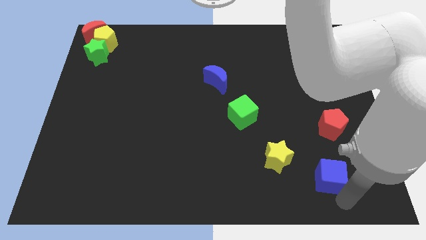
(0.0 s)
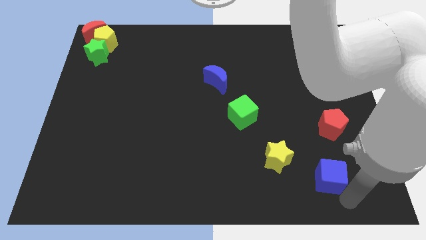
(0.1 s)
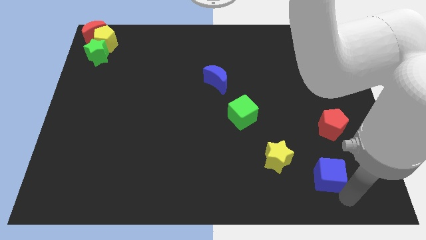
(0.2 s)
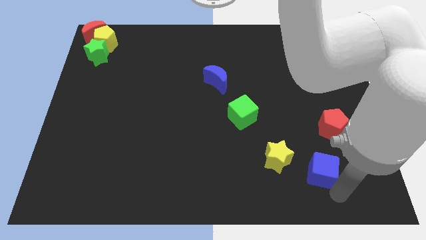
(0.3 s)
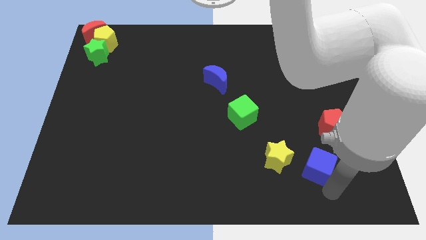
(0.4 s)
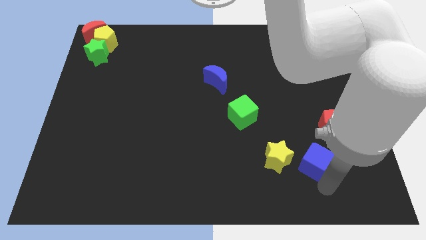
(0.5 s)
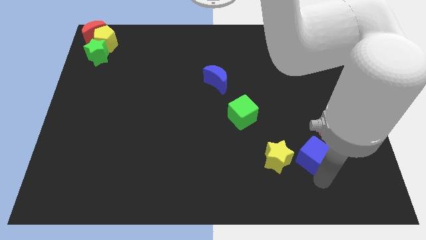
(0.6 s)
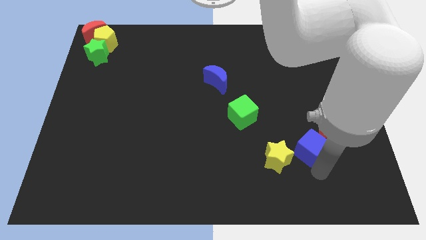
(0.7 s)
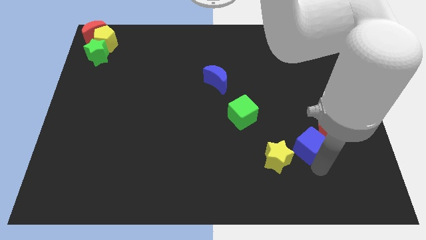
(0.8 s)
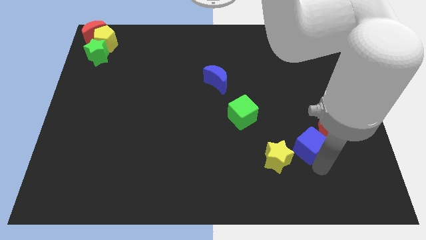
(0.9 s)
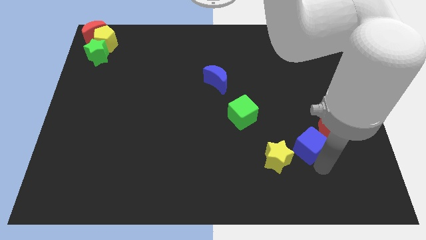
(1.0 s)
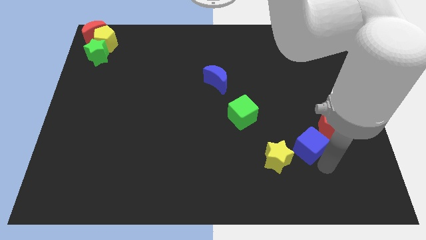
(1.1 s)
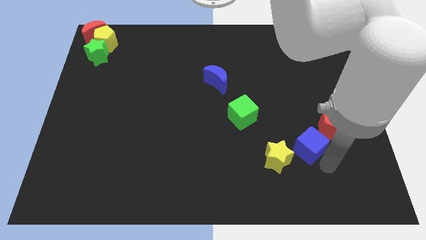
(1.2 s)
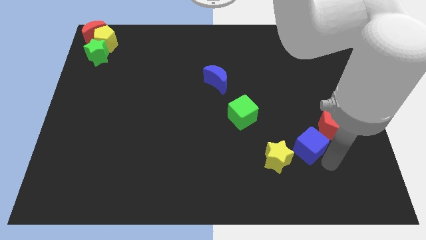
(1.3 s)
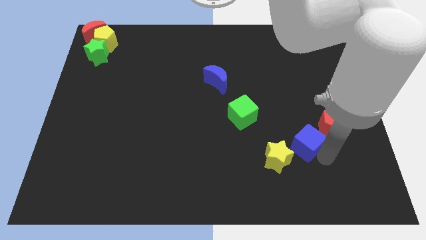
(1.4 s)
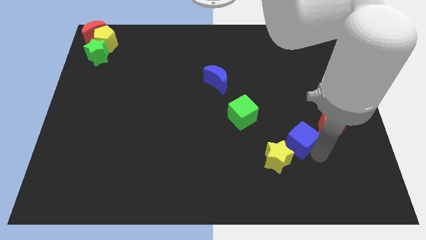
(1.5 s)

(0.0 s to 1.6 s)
place the blue cube in between the yellow star and red pentagon

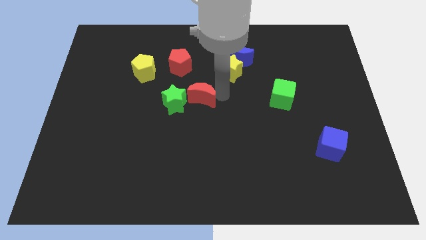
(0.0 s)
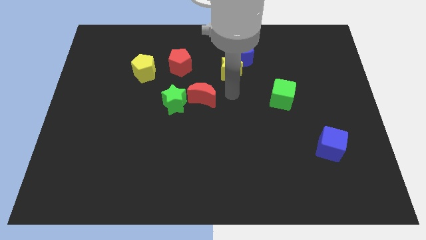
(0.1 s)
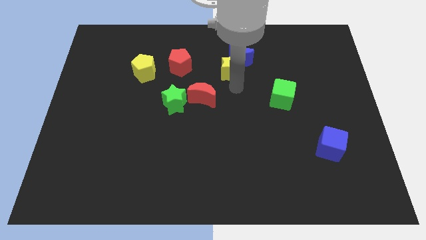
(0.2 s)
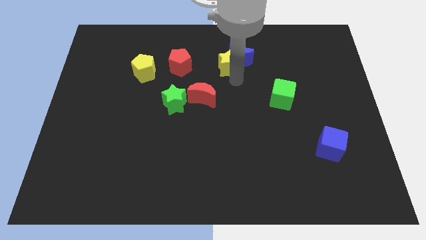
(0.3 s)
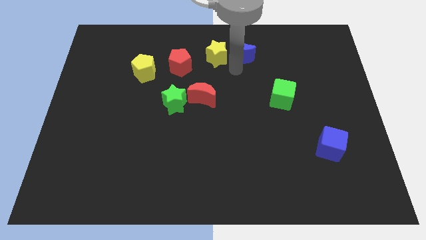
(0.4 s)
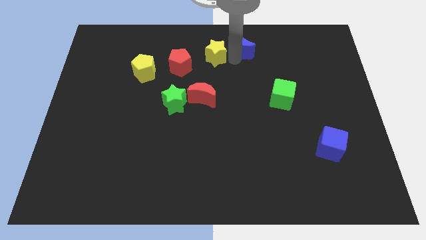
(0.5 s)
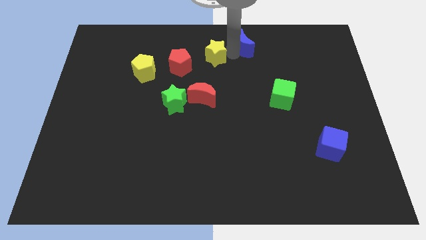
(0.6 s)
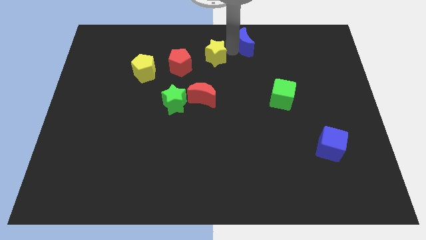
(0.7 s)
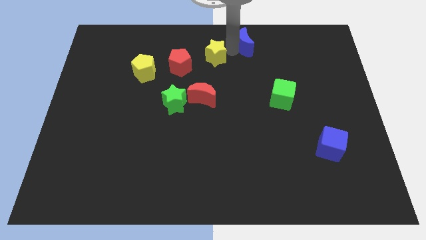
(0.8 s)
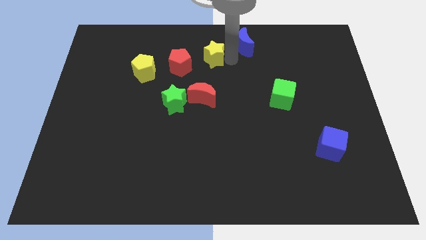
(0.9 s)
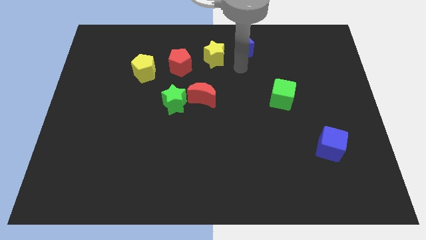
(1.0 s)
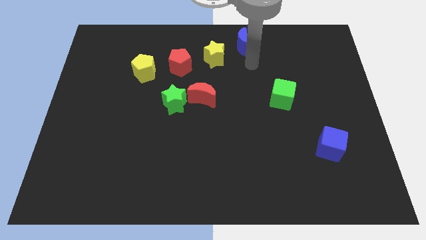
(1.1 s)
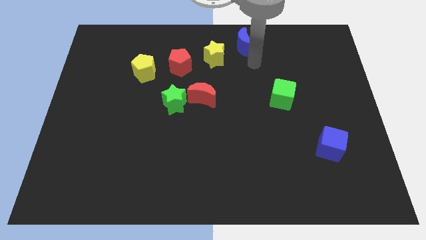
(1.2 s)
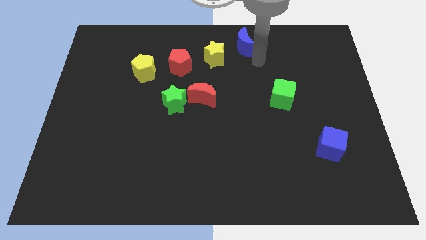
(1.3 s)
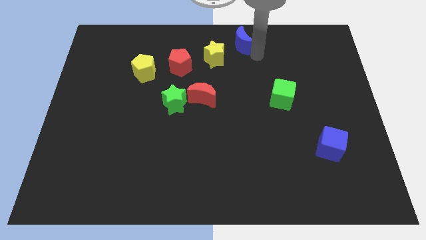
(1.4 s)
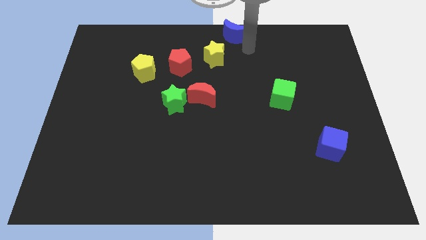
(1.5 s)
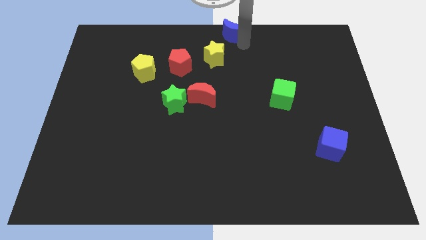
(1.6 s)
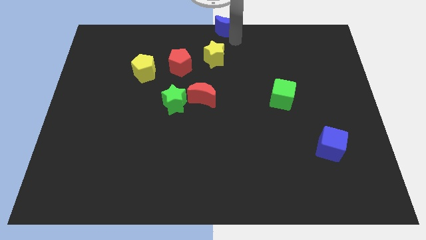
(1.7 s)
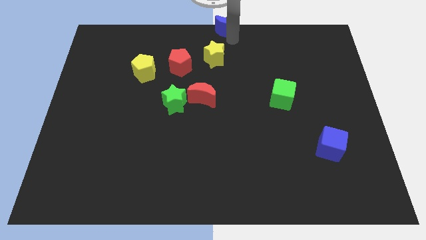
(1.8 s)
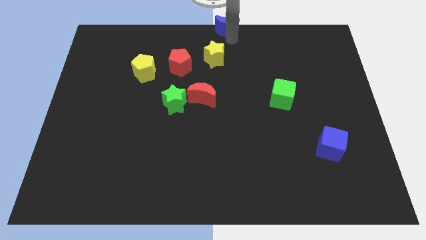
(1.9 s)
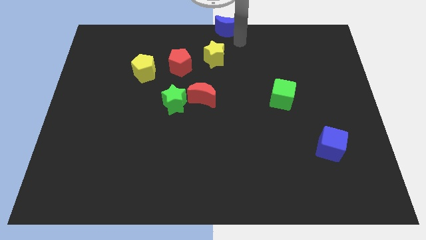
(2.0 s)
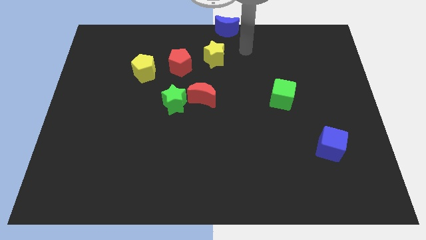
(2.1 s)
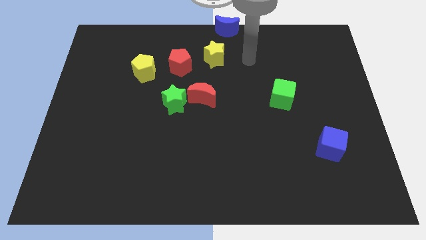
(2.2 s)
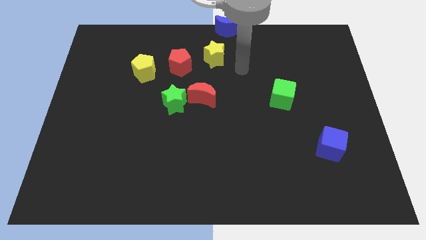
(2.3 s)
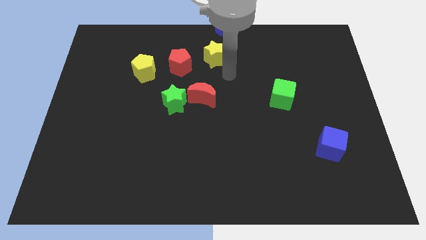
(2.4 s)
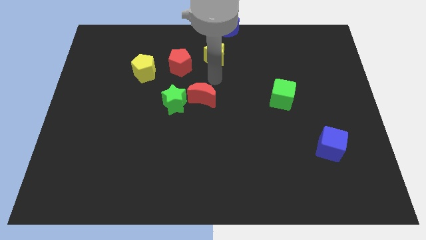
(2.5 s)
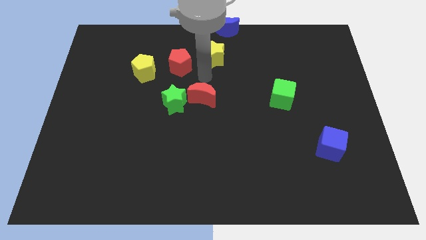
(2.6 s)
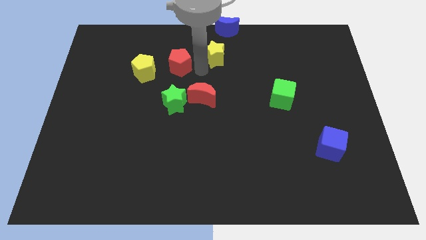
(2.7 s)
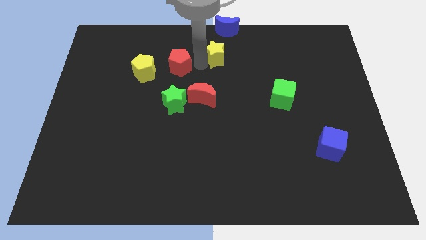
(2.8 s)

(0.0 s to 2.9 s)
place the blue moon at the top center of the board

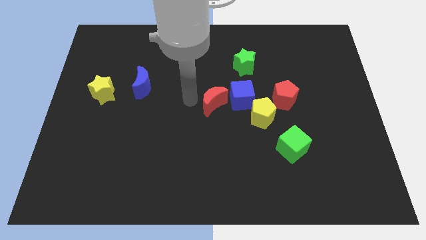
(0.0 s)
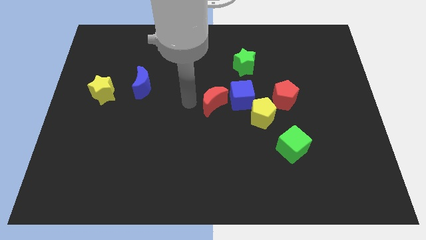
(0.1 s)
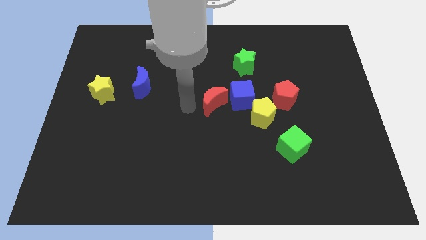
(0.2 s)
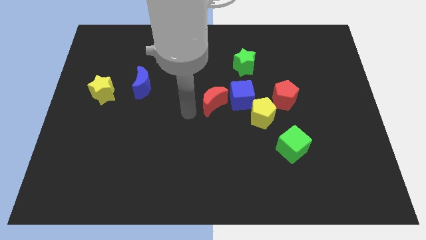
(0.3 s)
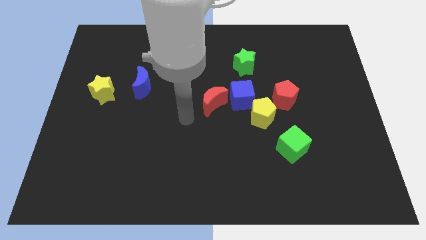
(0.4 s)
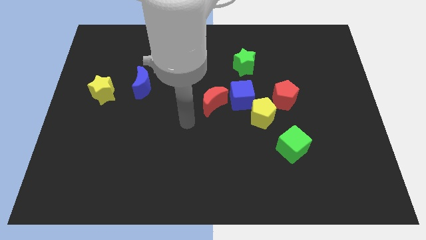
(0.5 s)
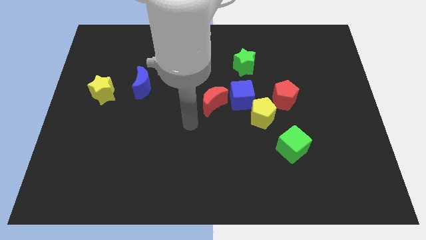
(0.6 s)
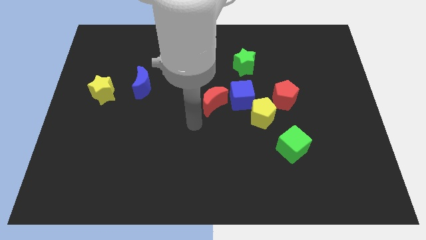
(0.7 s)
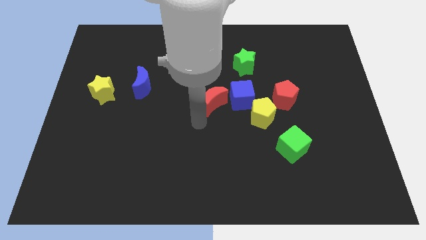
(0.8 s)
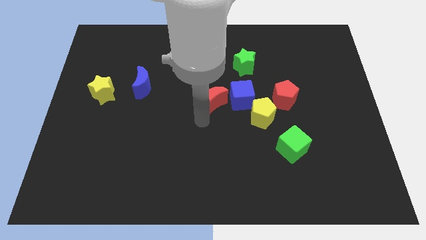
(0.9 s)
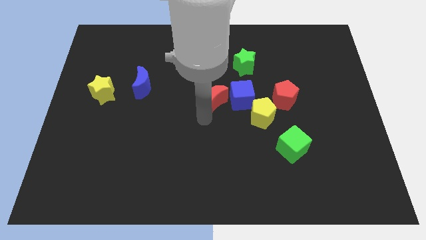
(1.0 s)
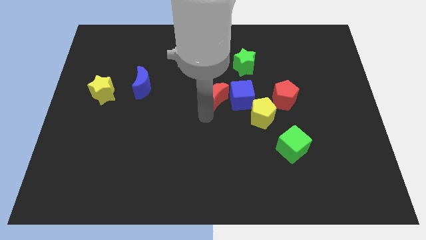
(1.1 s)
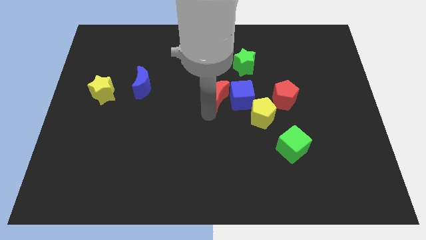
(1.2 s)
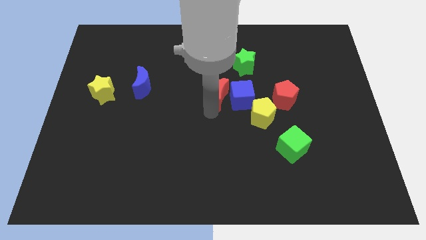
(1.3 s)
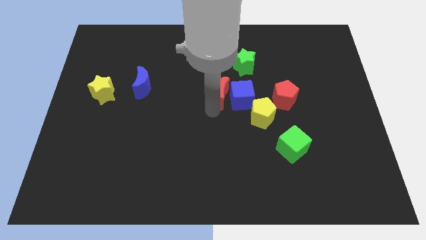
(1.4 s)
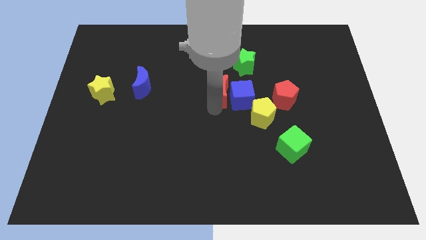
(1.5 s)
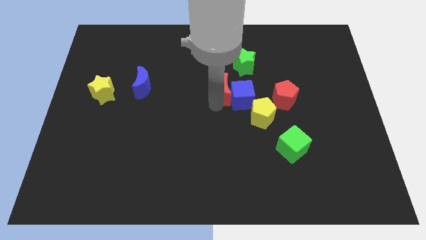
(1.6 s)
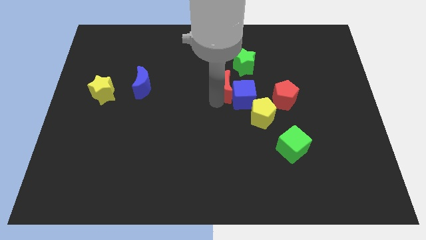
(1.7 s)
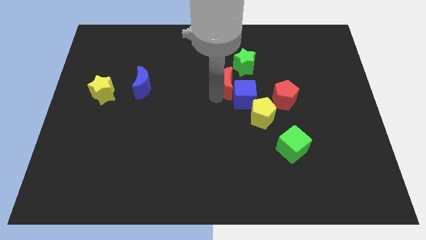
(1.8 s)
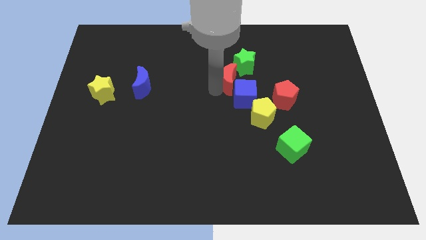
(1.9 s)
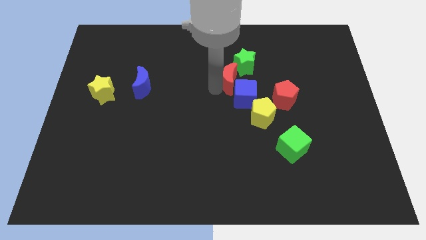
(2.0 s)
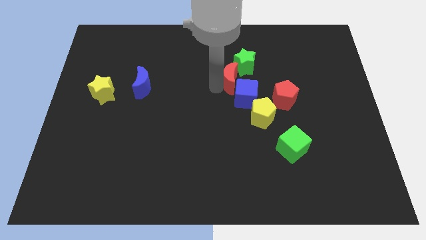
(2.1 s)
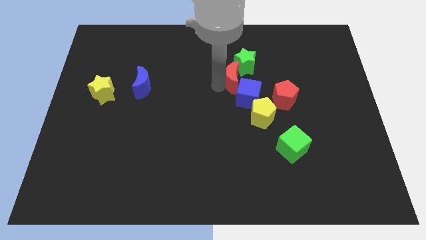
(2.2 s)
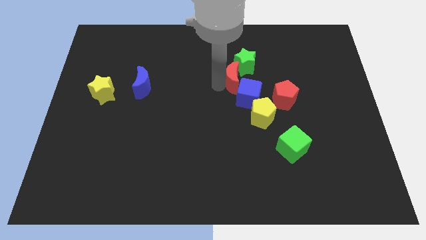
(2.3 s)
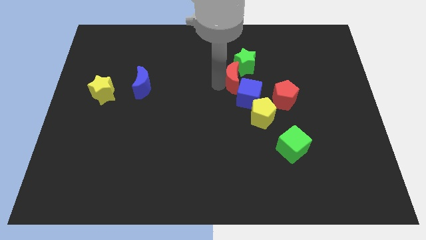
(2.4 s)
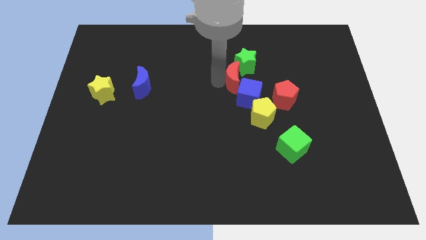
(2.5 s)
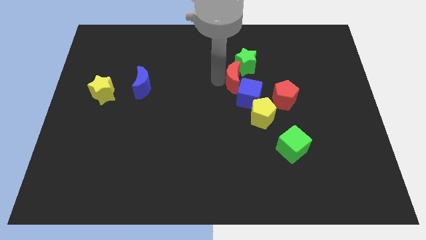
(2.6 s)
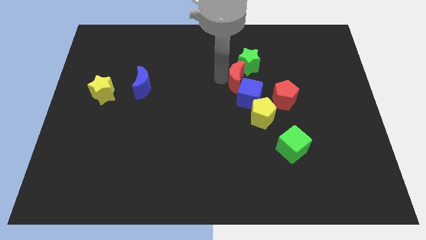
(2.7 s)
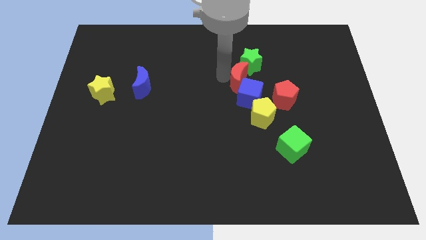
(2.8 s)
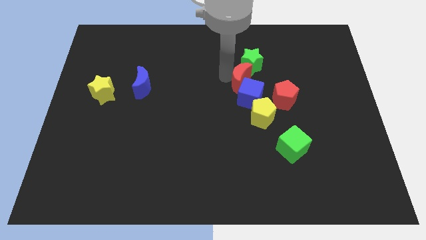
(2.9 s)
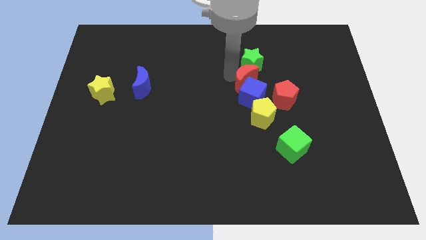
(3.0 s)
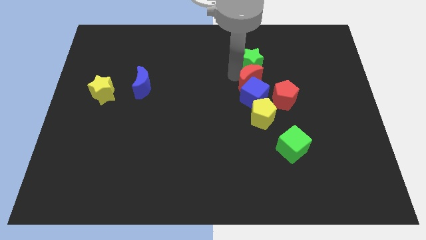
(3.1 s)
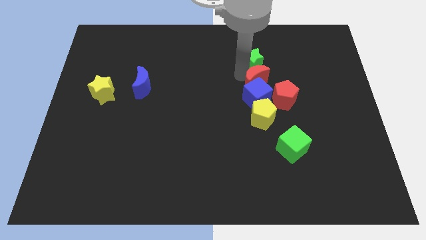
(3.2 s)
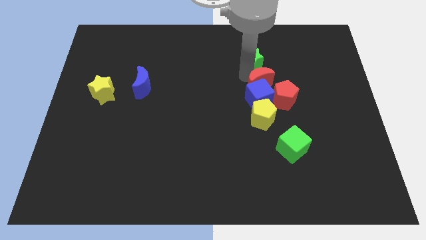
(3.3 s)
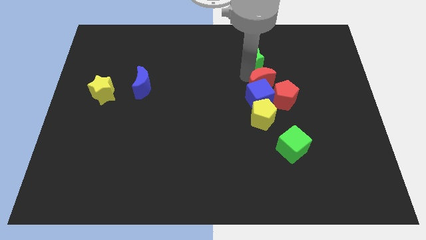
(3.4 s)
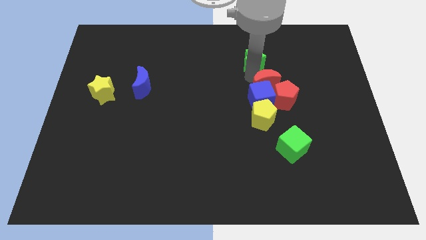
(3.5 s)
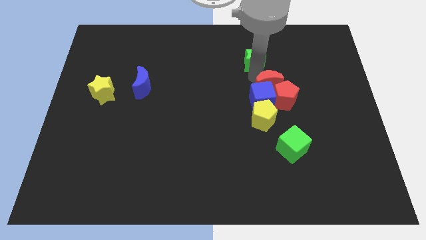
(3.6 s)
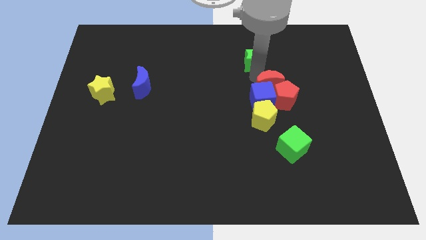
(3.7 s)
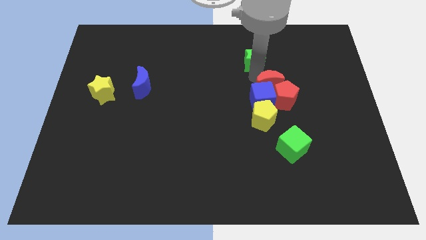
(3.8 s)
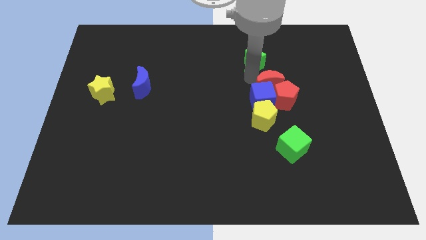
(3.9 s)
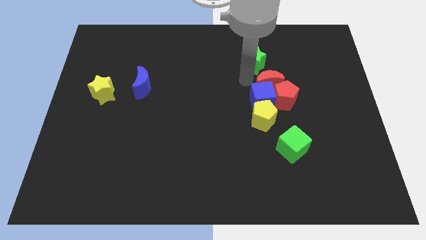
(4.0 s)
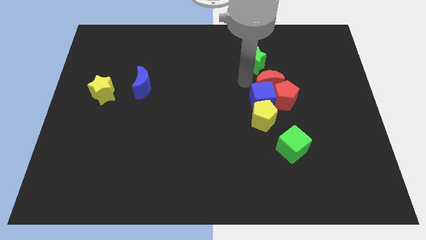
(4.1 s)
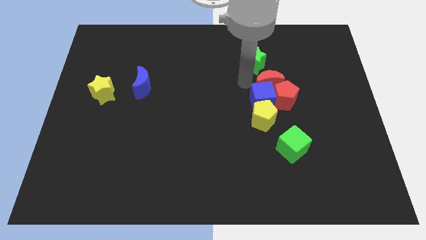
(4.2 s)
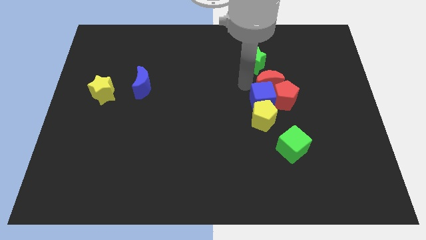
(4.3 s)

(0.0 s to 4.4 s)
move red crescent below to the green star
